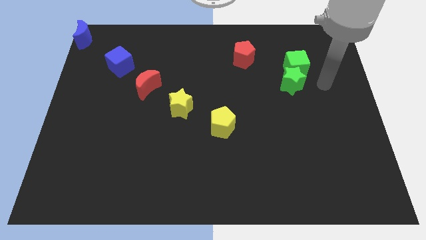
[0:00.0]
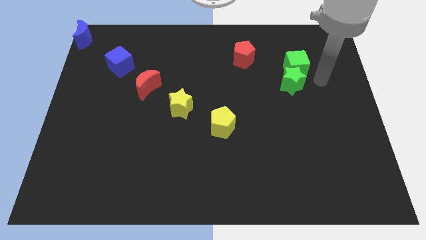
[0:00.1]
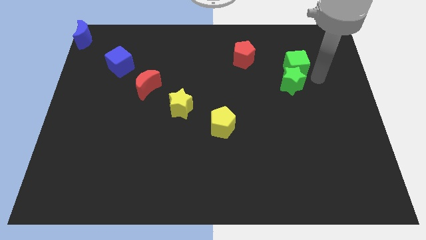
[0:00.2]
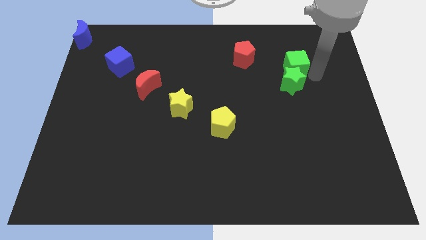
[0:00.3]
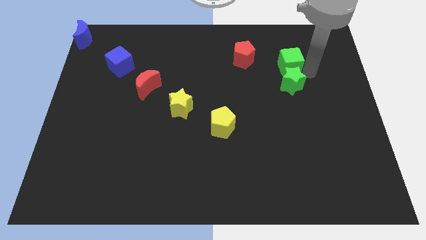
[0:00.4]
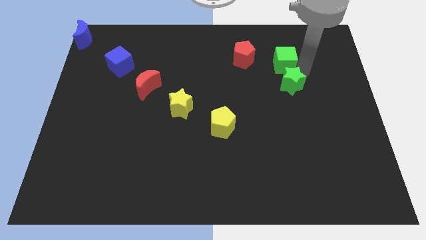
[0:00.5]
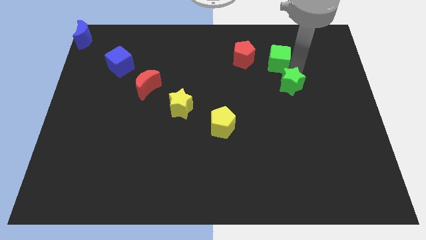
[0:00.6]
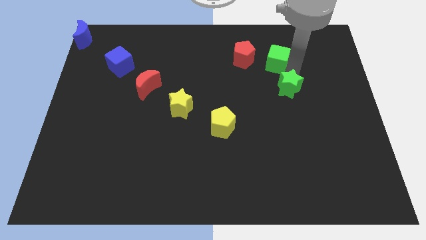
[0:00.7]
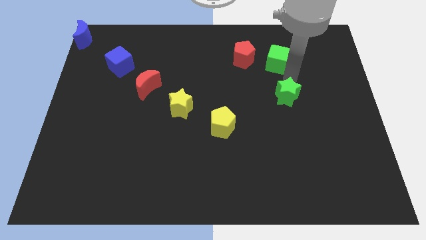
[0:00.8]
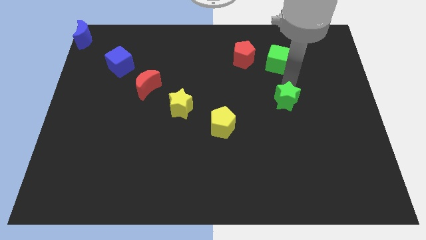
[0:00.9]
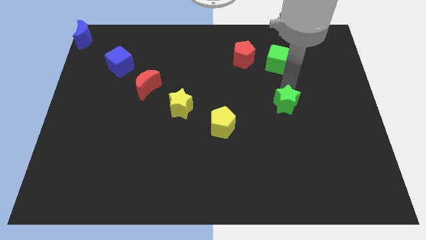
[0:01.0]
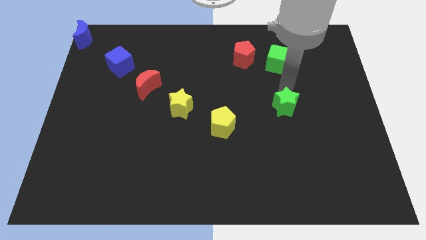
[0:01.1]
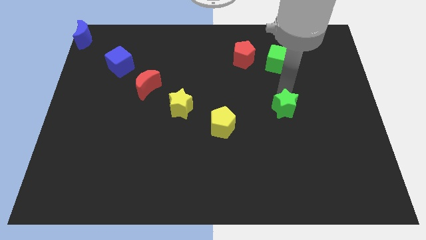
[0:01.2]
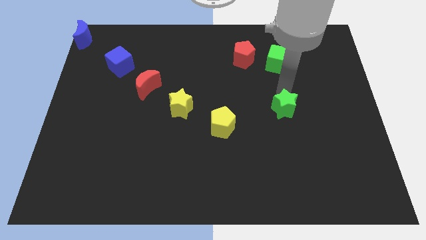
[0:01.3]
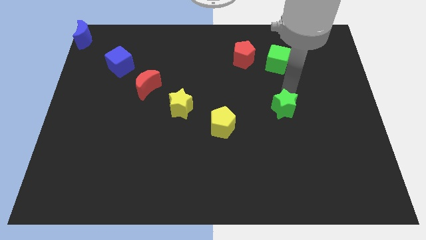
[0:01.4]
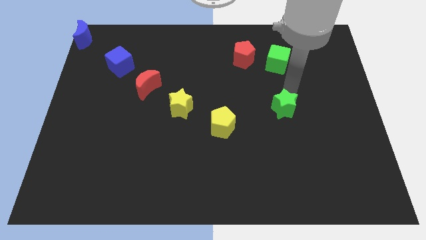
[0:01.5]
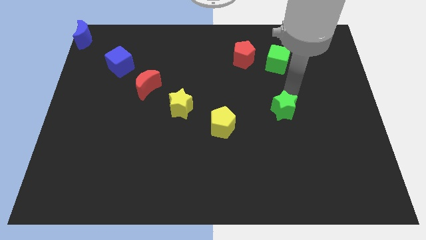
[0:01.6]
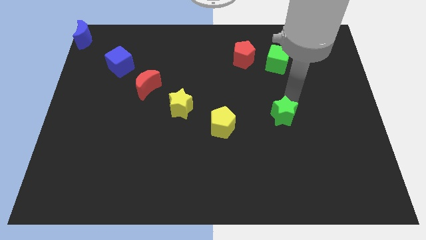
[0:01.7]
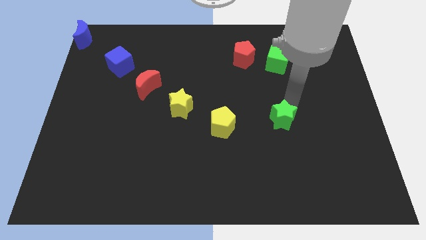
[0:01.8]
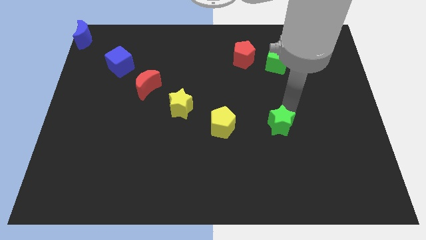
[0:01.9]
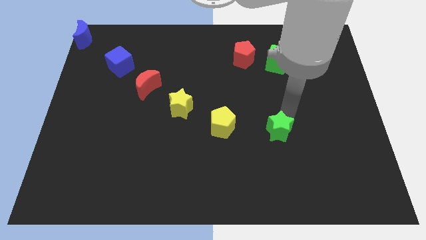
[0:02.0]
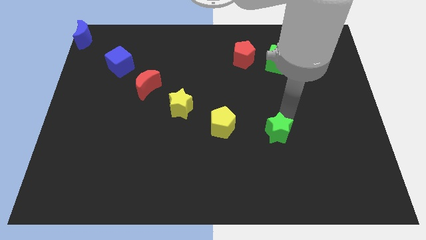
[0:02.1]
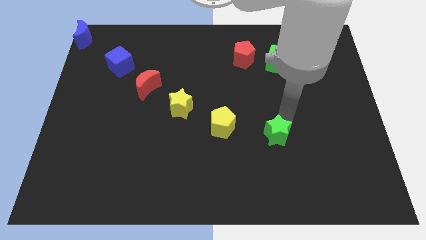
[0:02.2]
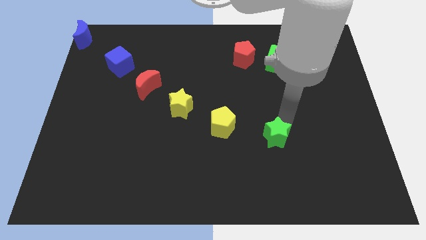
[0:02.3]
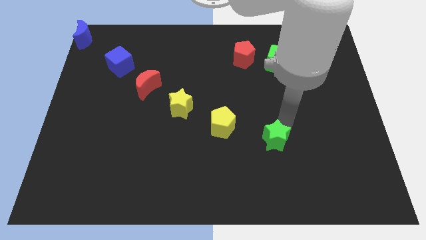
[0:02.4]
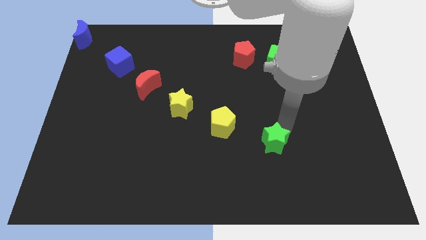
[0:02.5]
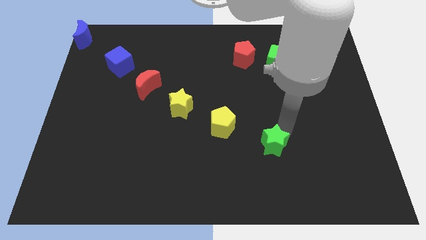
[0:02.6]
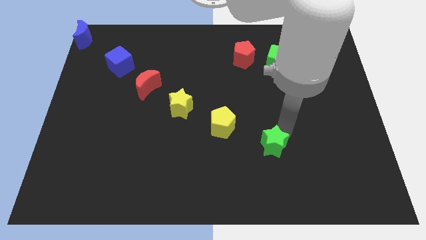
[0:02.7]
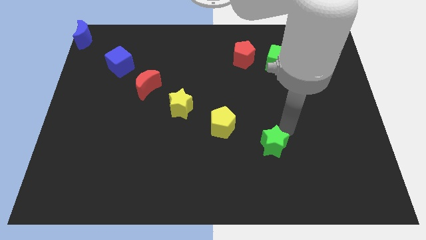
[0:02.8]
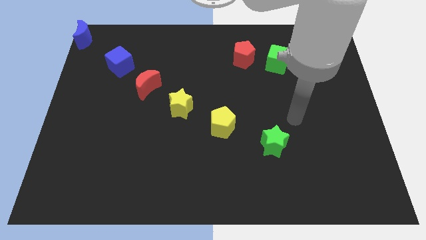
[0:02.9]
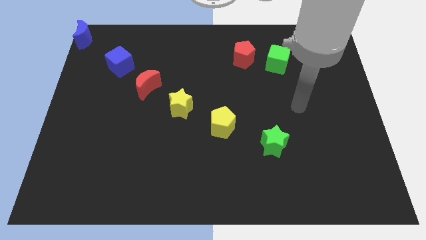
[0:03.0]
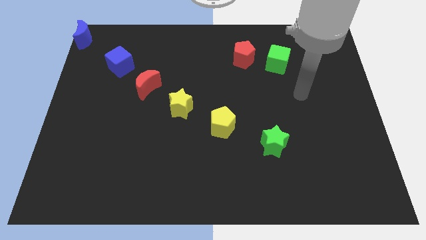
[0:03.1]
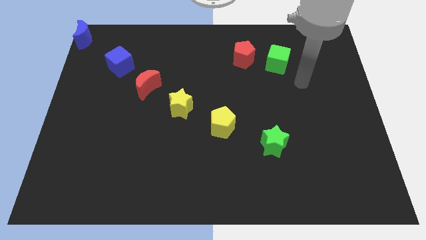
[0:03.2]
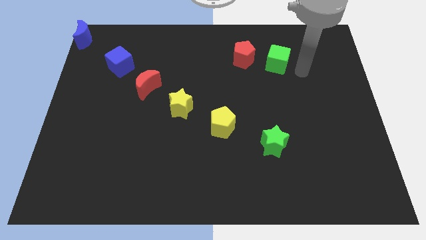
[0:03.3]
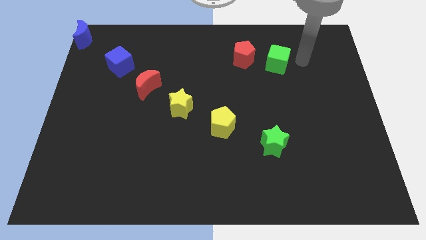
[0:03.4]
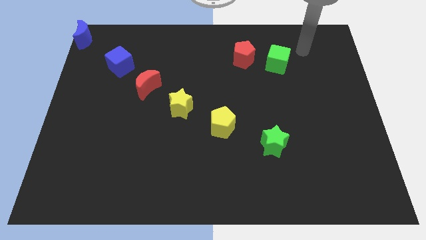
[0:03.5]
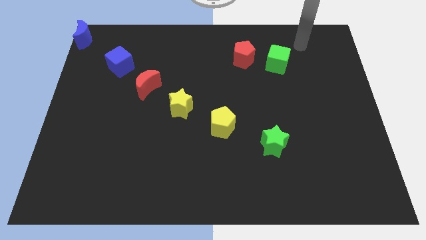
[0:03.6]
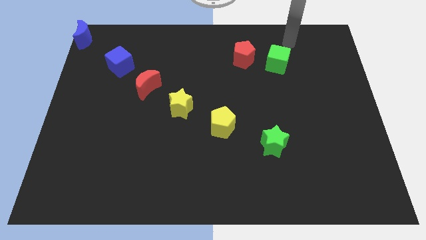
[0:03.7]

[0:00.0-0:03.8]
push the green star towards the diagonal bottom right of the yellow pentagon

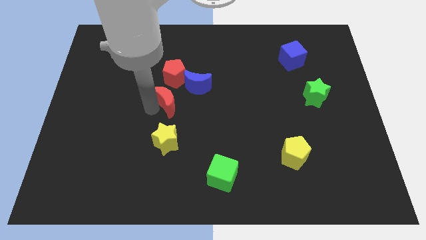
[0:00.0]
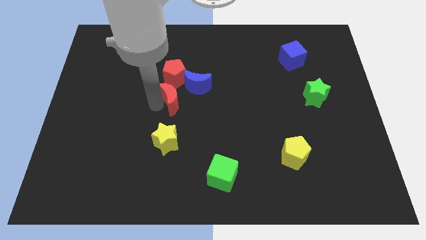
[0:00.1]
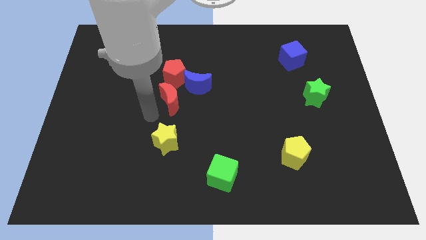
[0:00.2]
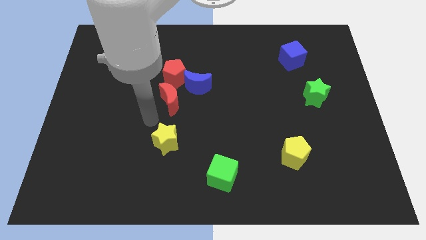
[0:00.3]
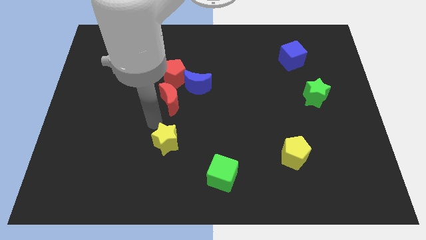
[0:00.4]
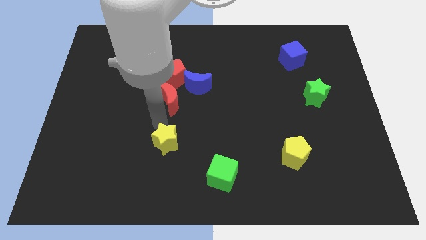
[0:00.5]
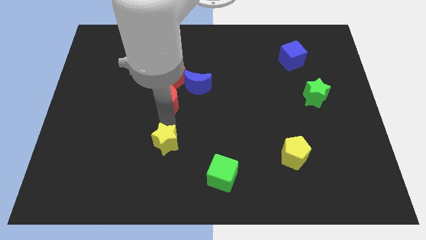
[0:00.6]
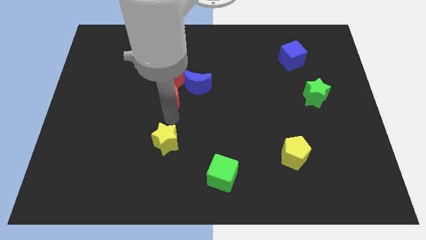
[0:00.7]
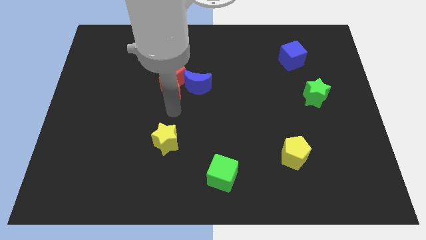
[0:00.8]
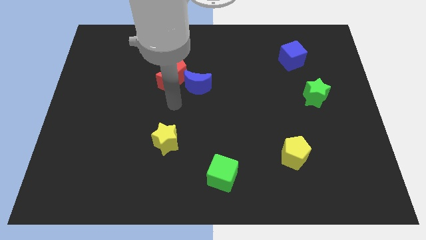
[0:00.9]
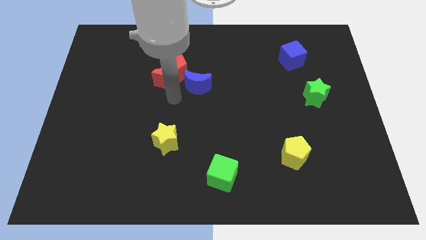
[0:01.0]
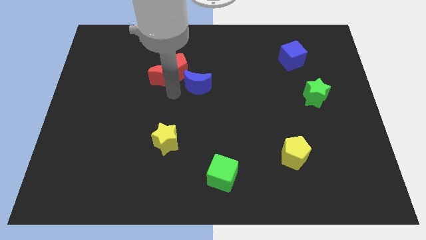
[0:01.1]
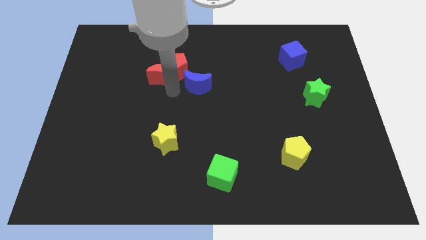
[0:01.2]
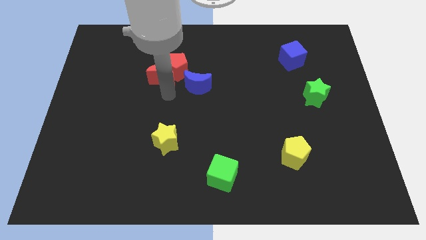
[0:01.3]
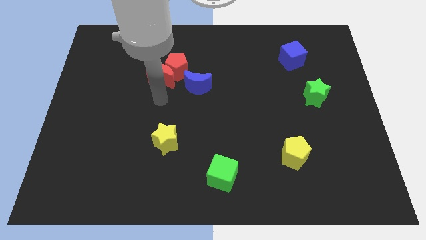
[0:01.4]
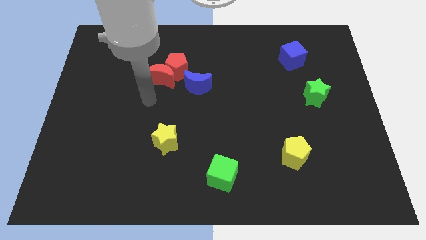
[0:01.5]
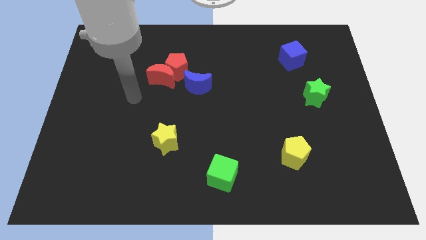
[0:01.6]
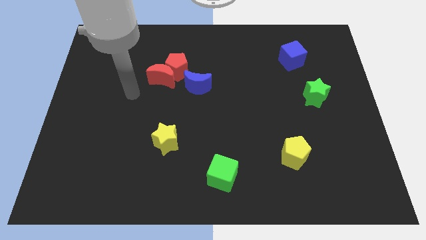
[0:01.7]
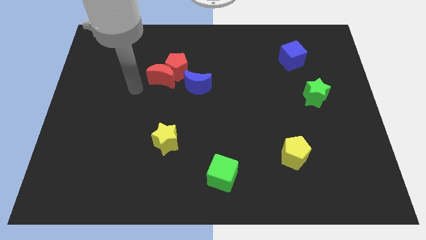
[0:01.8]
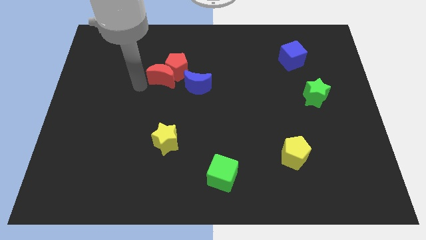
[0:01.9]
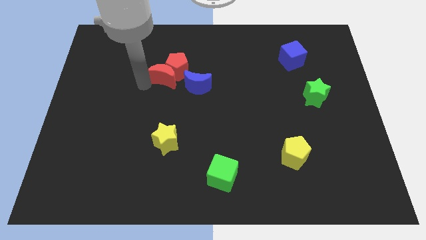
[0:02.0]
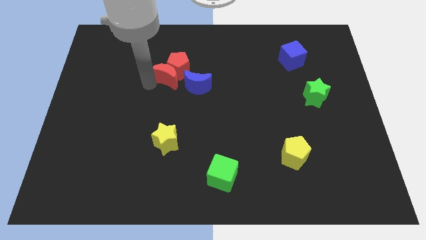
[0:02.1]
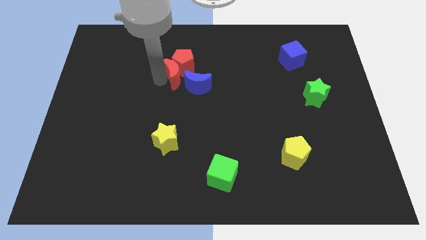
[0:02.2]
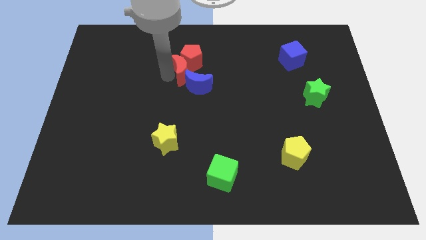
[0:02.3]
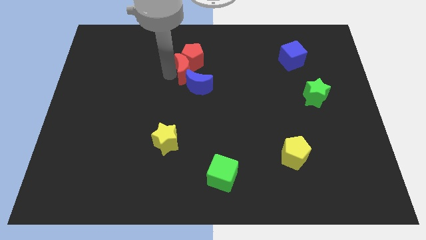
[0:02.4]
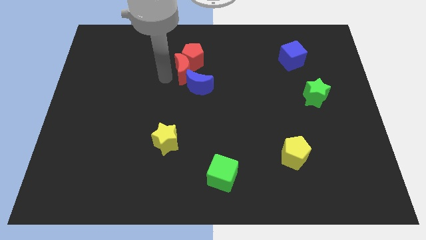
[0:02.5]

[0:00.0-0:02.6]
push red crescent towards top center

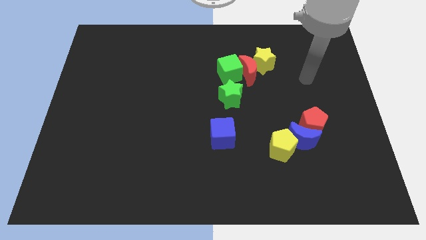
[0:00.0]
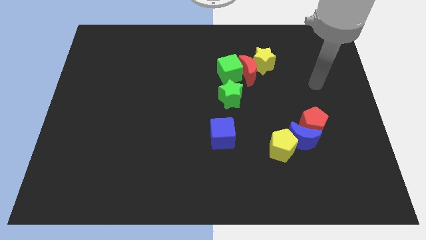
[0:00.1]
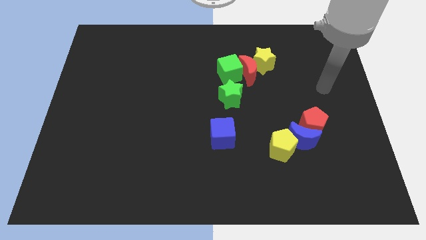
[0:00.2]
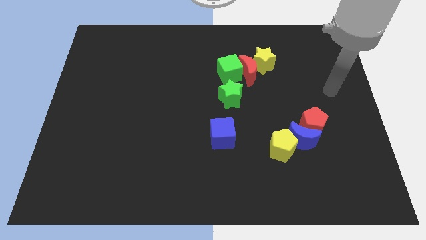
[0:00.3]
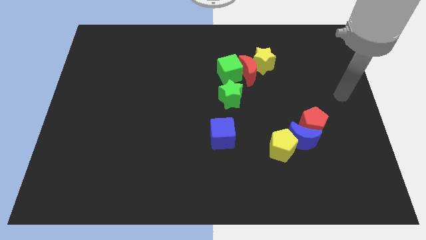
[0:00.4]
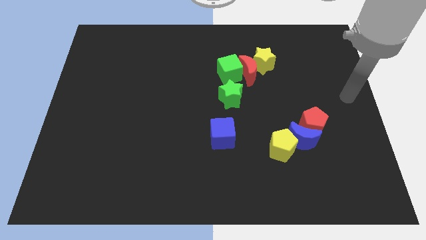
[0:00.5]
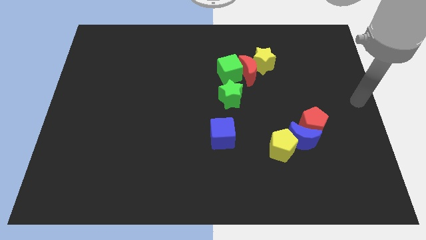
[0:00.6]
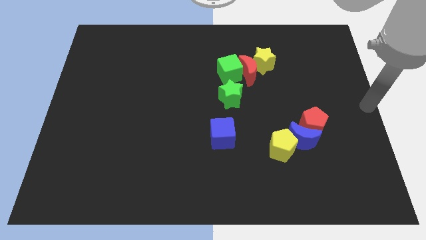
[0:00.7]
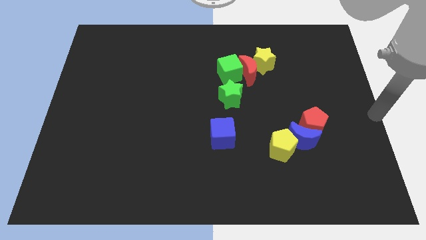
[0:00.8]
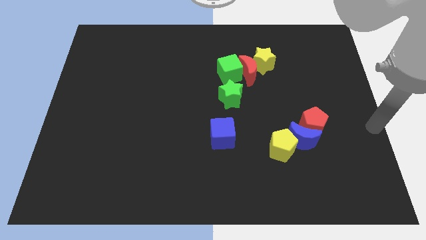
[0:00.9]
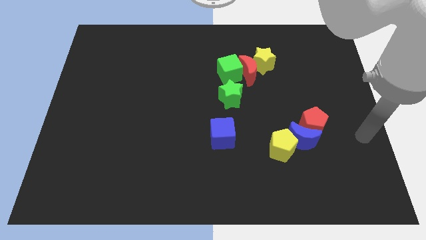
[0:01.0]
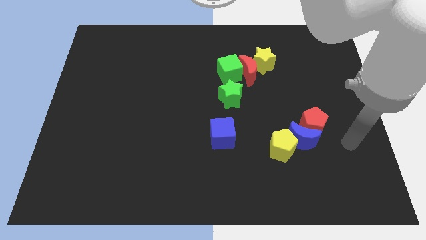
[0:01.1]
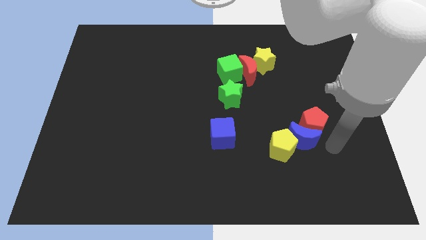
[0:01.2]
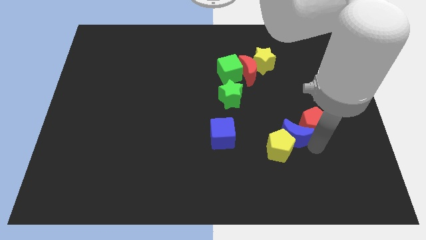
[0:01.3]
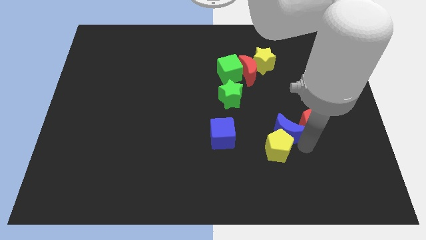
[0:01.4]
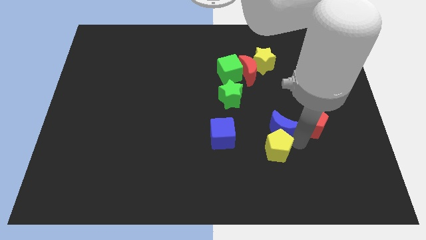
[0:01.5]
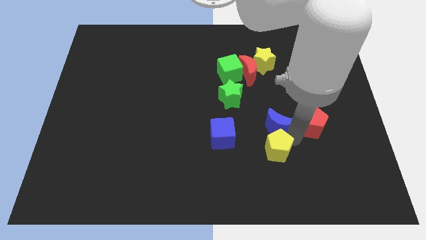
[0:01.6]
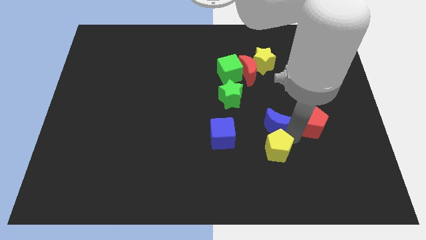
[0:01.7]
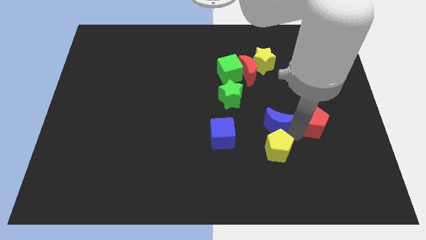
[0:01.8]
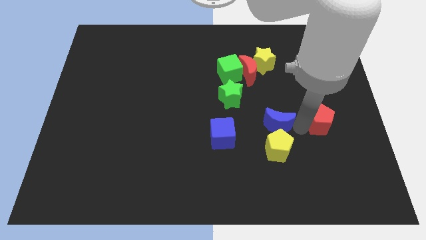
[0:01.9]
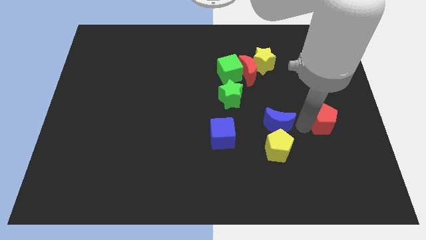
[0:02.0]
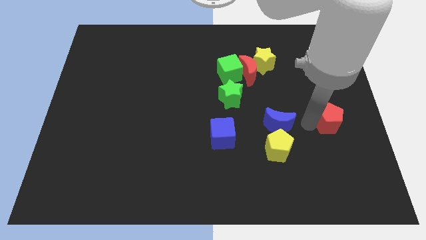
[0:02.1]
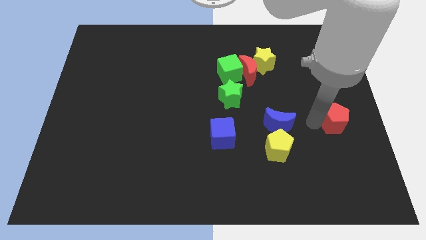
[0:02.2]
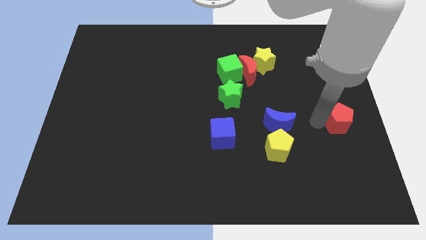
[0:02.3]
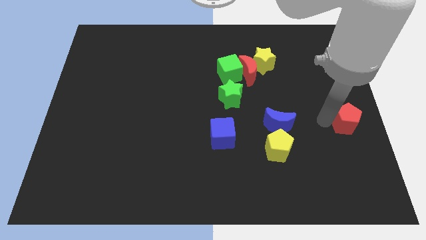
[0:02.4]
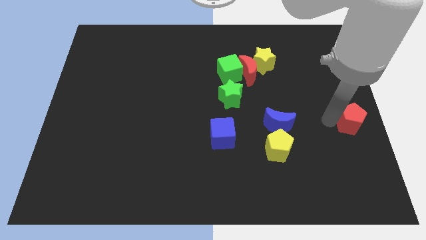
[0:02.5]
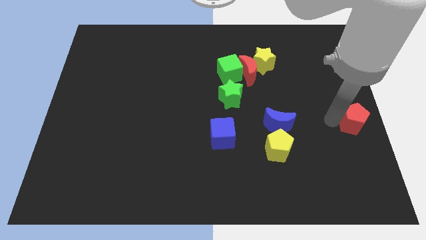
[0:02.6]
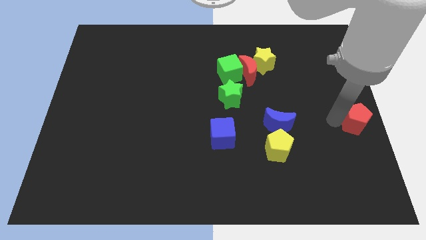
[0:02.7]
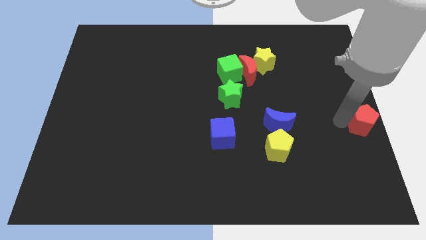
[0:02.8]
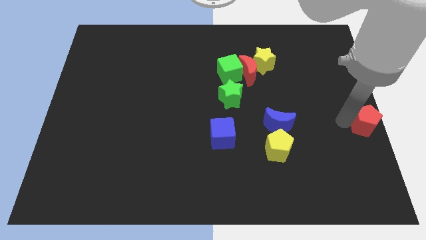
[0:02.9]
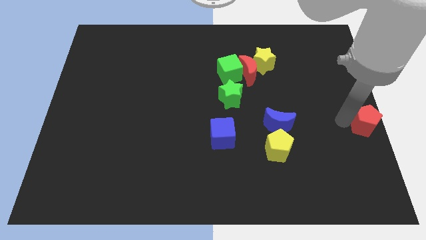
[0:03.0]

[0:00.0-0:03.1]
separate the red pentagon and the blue crescent
